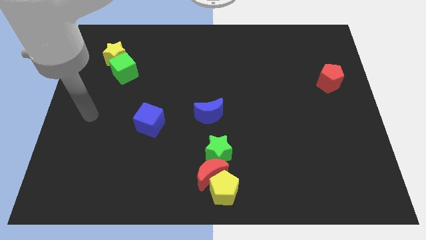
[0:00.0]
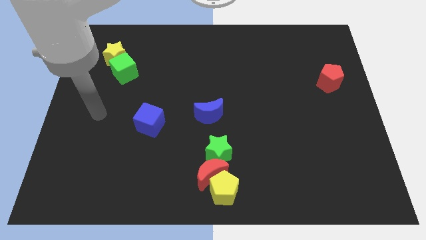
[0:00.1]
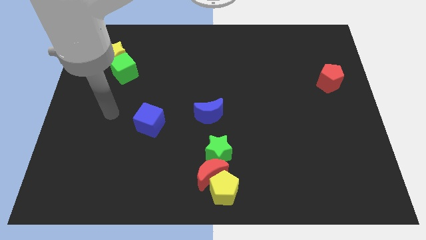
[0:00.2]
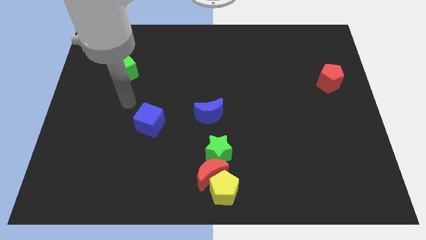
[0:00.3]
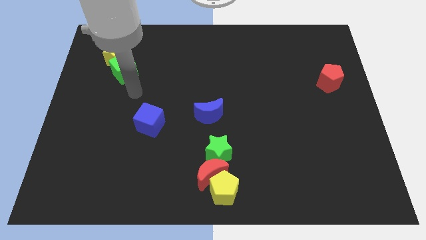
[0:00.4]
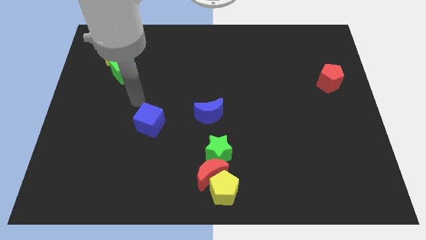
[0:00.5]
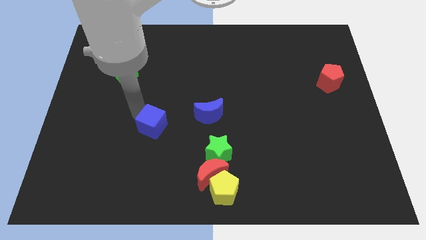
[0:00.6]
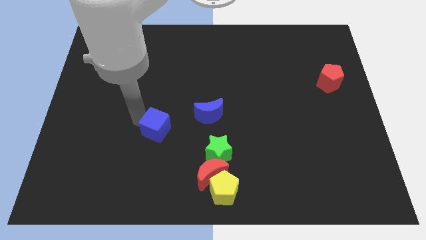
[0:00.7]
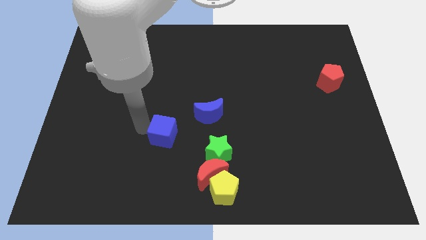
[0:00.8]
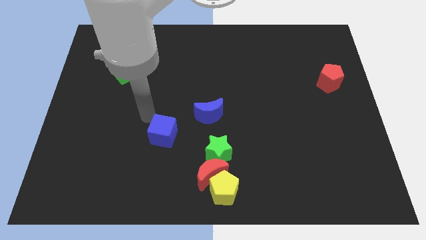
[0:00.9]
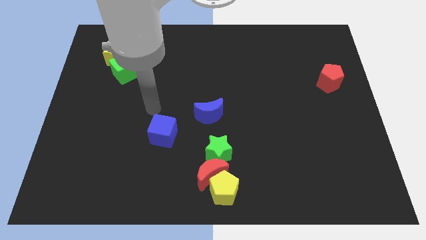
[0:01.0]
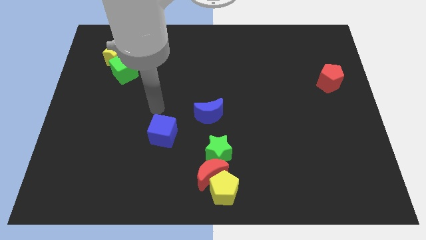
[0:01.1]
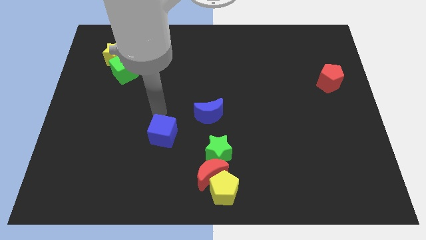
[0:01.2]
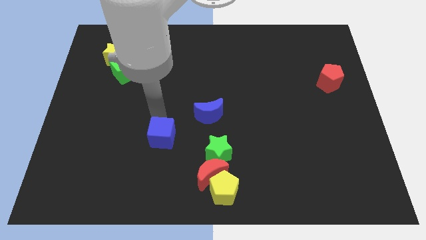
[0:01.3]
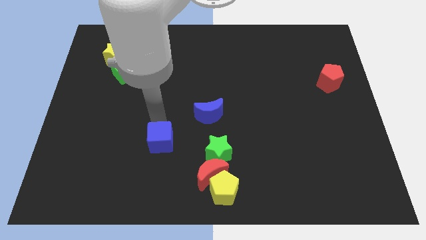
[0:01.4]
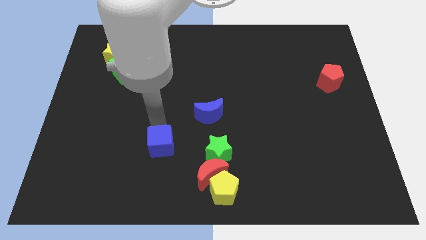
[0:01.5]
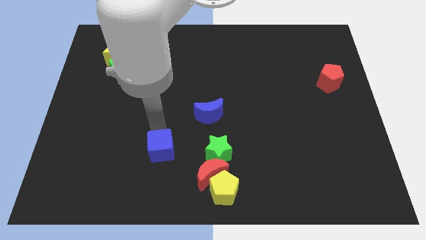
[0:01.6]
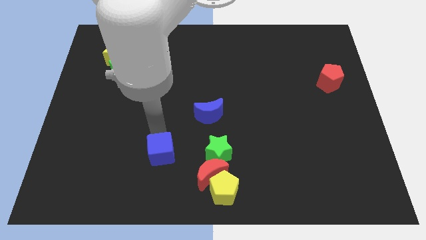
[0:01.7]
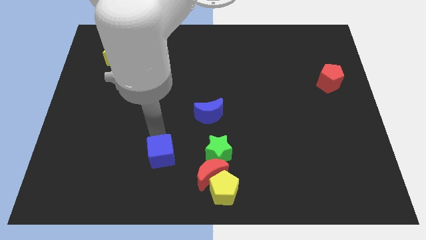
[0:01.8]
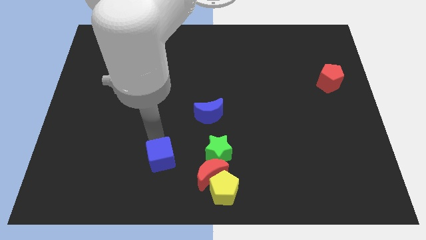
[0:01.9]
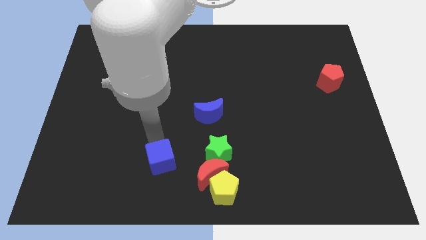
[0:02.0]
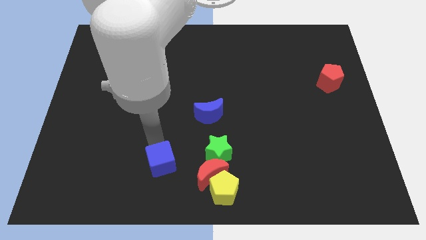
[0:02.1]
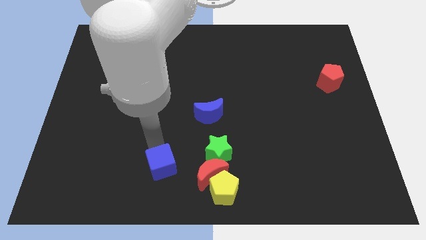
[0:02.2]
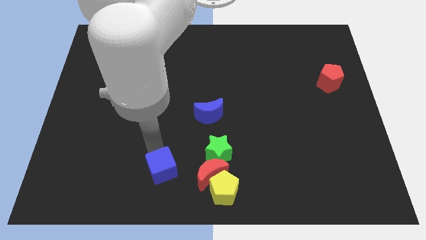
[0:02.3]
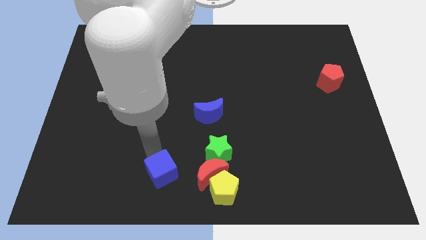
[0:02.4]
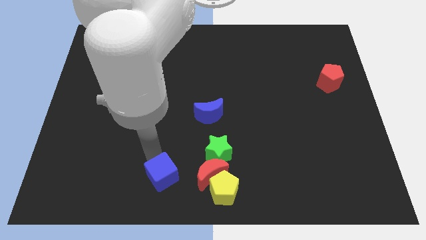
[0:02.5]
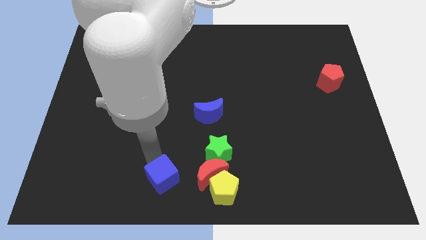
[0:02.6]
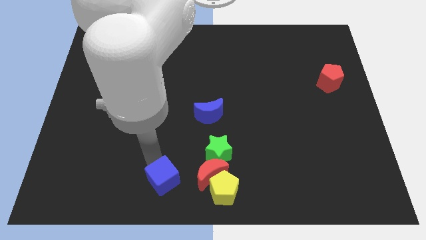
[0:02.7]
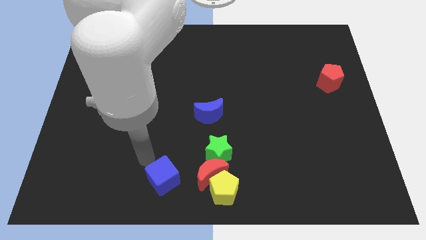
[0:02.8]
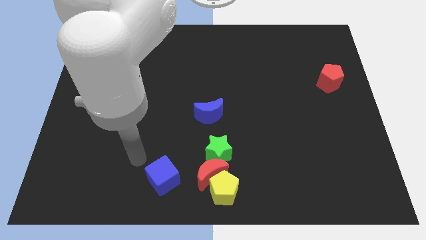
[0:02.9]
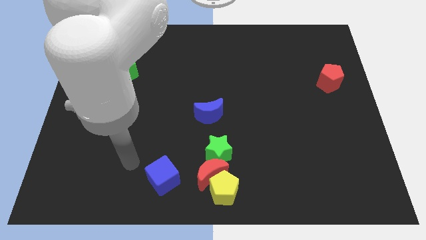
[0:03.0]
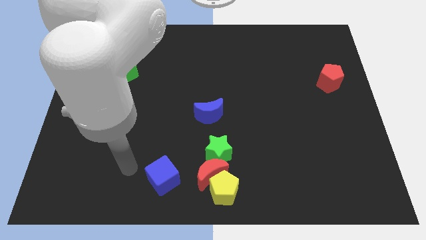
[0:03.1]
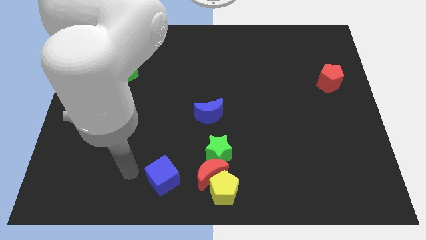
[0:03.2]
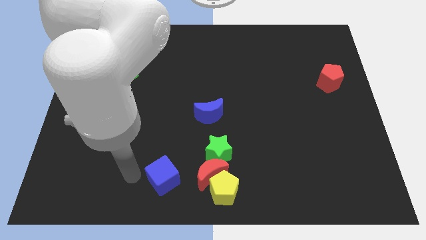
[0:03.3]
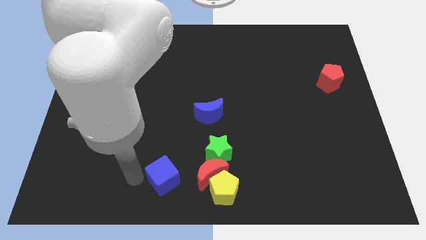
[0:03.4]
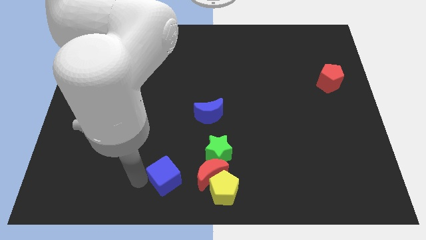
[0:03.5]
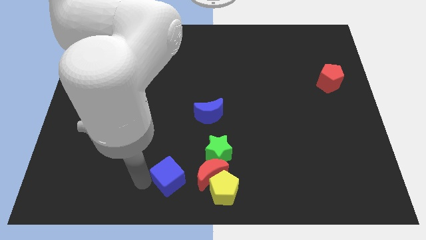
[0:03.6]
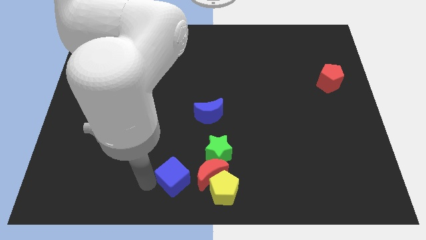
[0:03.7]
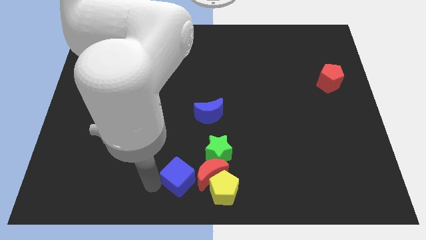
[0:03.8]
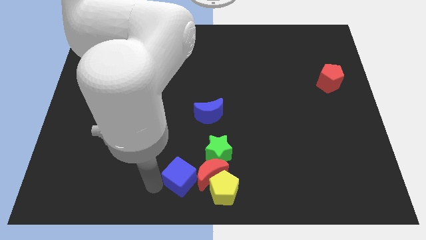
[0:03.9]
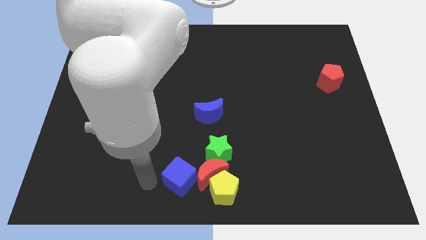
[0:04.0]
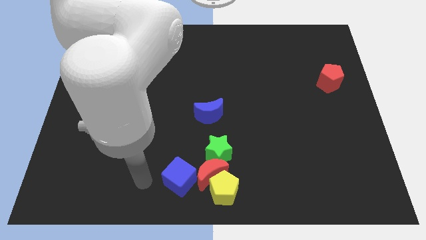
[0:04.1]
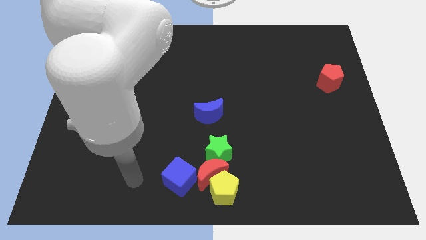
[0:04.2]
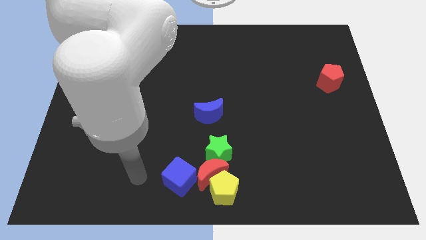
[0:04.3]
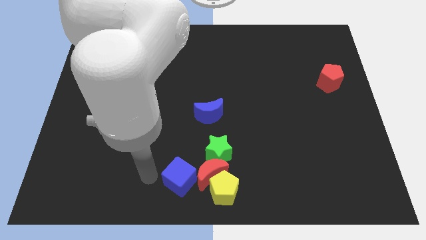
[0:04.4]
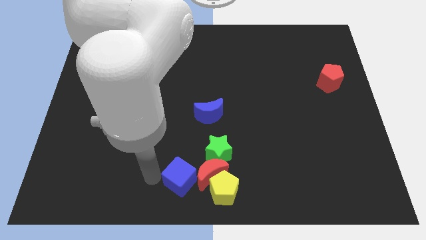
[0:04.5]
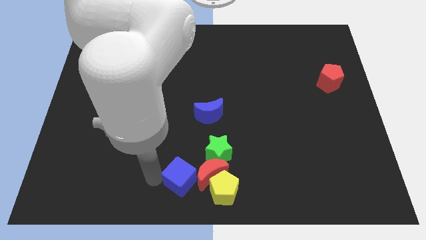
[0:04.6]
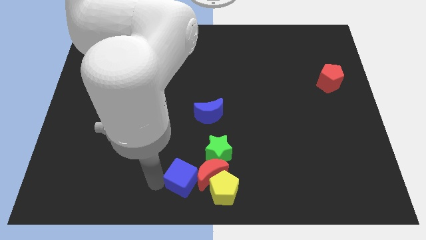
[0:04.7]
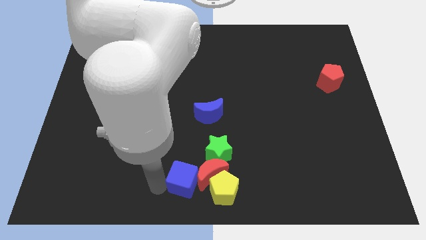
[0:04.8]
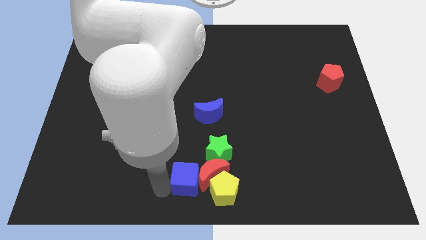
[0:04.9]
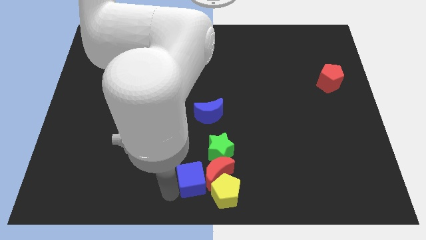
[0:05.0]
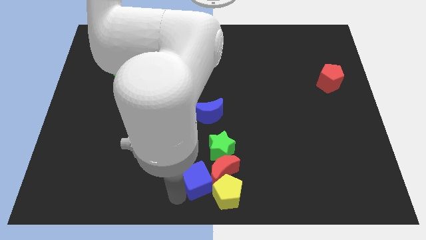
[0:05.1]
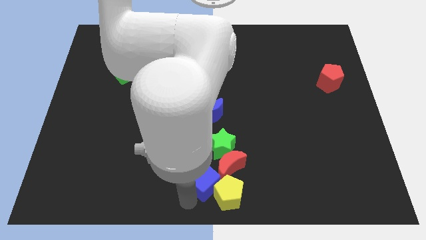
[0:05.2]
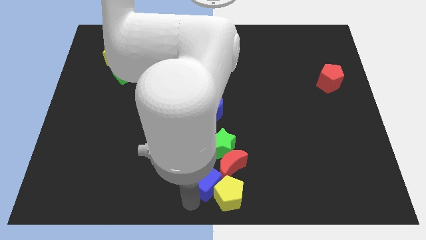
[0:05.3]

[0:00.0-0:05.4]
put the blue cube close to the yellow pentagon

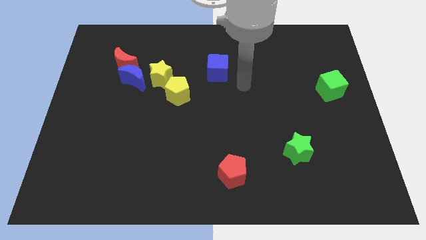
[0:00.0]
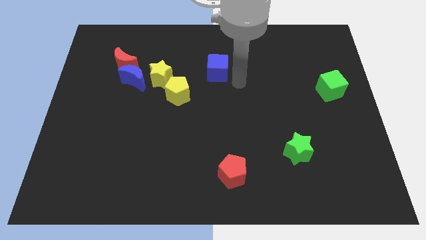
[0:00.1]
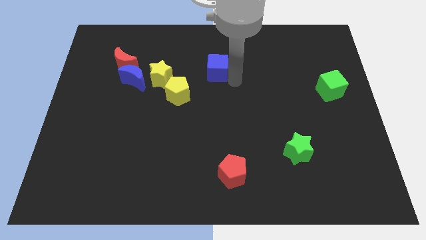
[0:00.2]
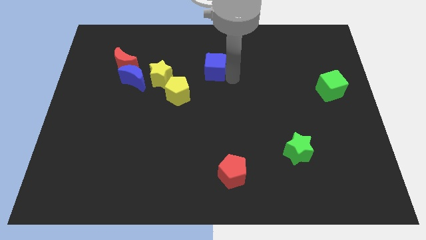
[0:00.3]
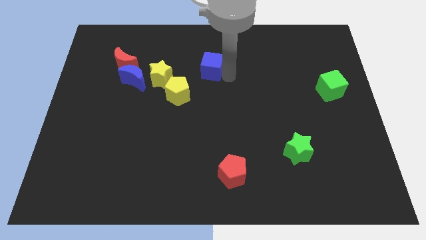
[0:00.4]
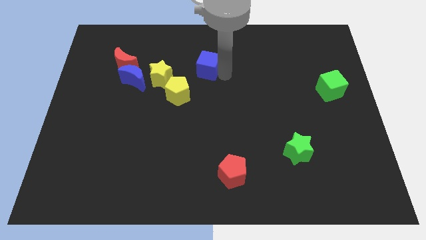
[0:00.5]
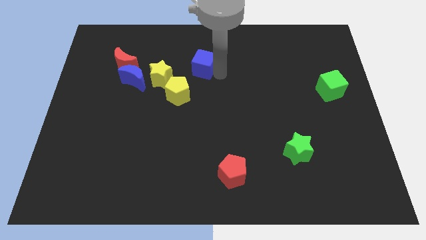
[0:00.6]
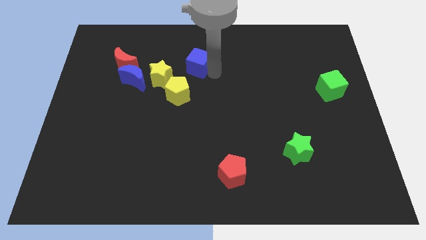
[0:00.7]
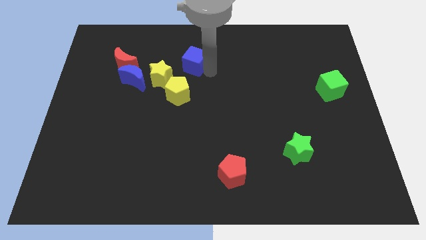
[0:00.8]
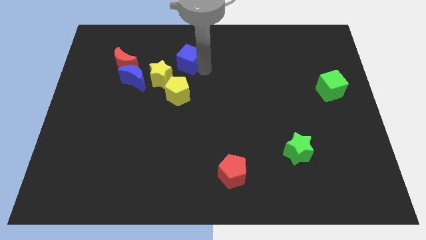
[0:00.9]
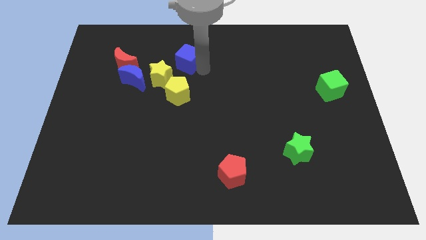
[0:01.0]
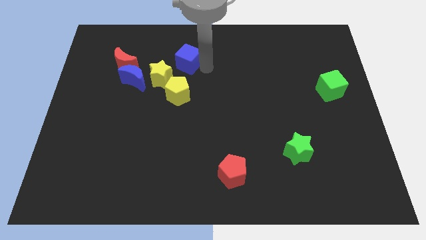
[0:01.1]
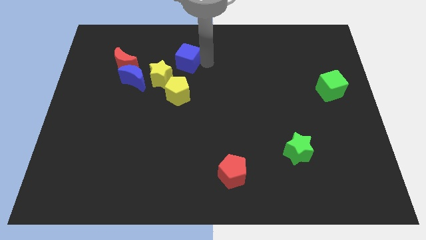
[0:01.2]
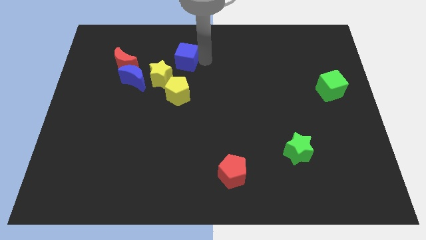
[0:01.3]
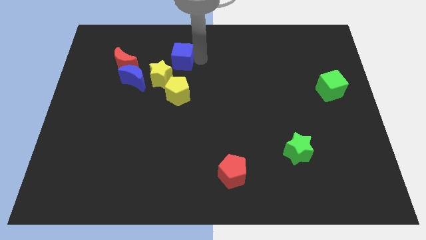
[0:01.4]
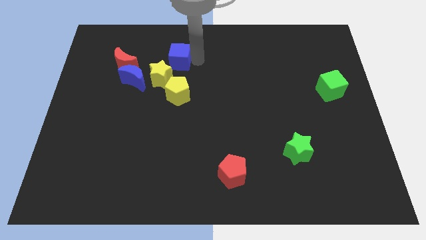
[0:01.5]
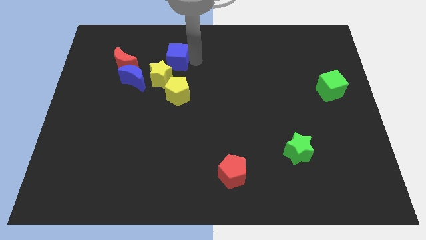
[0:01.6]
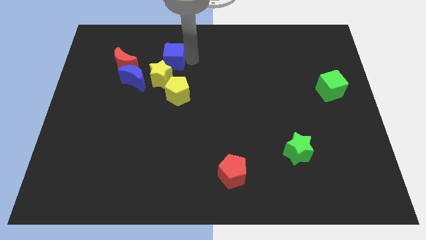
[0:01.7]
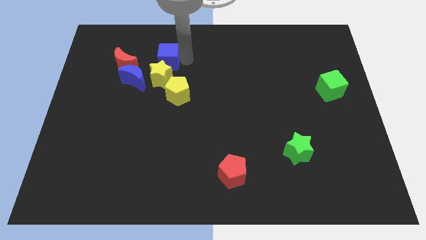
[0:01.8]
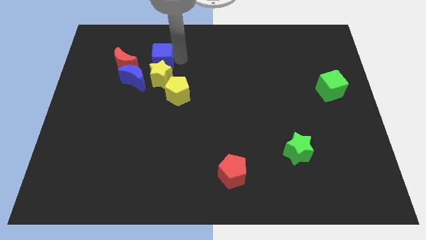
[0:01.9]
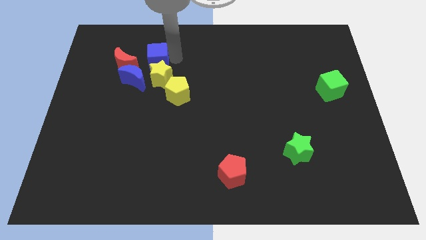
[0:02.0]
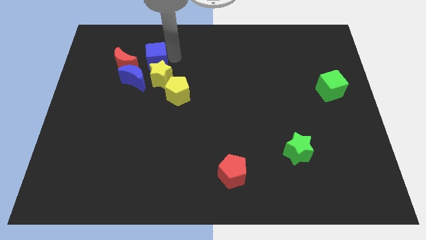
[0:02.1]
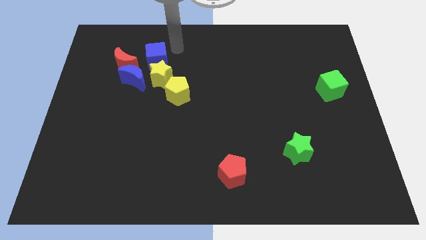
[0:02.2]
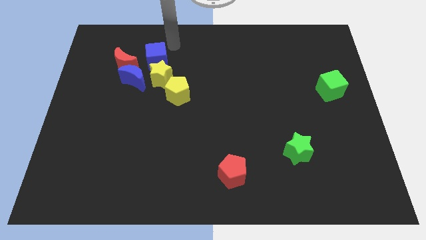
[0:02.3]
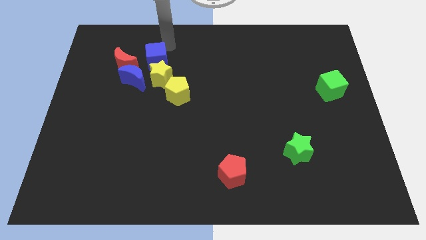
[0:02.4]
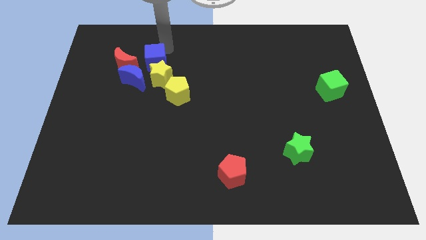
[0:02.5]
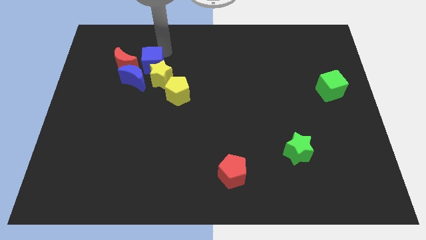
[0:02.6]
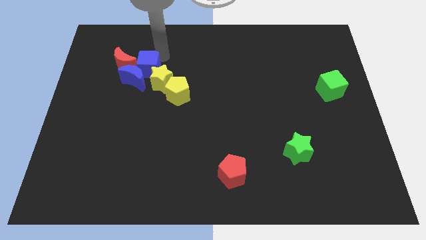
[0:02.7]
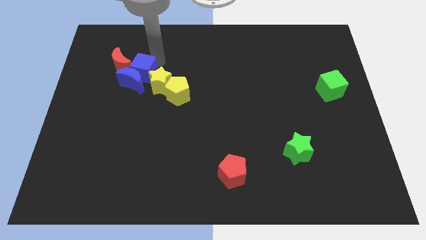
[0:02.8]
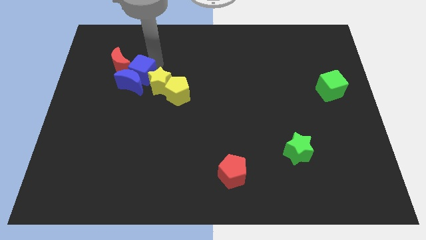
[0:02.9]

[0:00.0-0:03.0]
move the blue cube next to the blue moon
